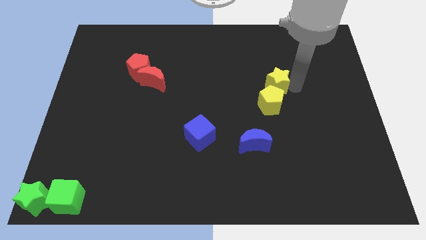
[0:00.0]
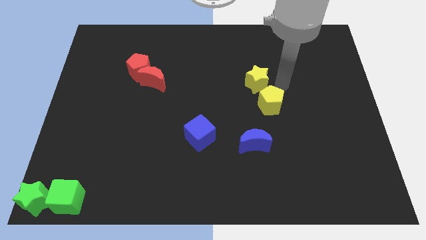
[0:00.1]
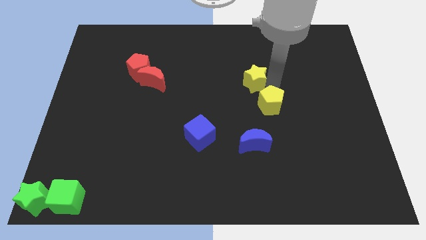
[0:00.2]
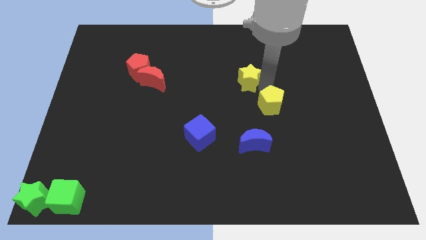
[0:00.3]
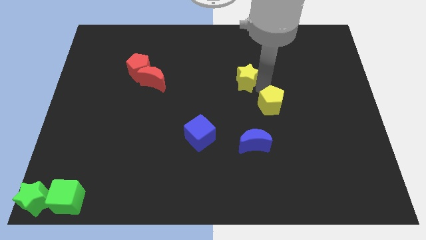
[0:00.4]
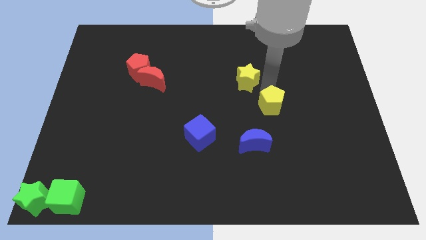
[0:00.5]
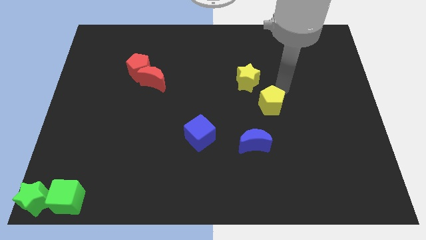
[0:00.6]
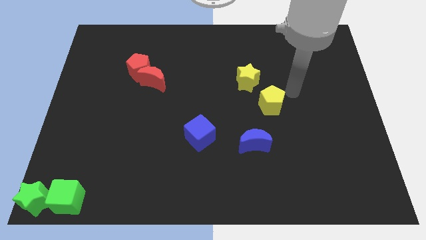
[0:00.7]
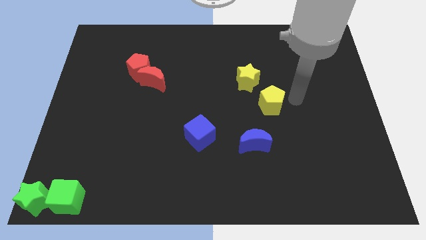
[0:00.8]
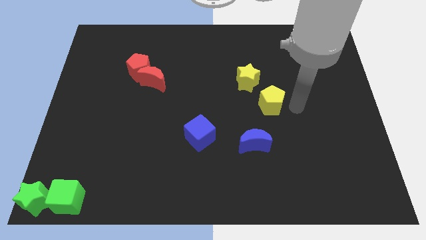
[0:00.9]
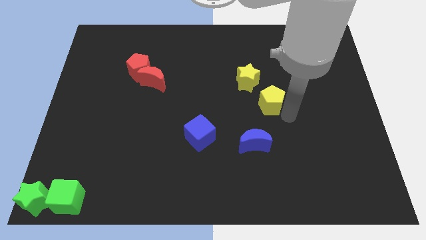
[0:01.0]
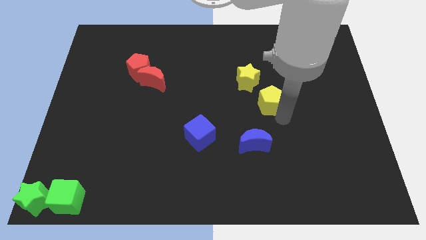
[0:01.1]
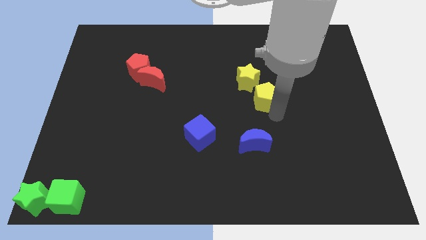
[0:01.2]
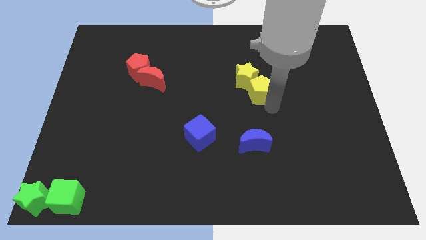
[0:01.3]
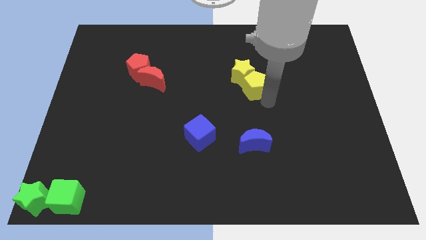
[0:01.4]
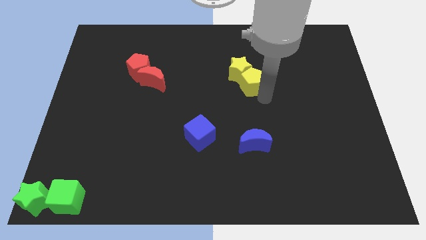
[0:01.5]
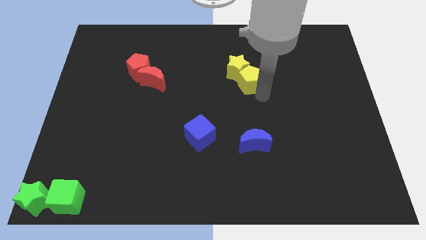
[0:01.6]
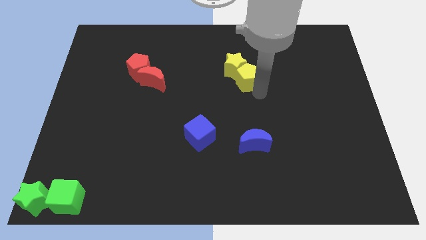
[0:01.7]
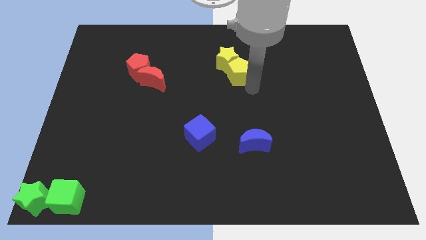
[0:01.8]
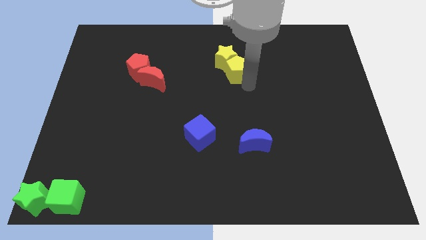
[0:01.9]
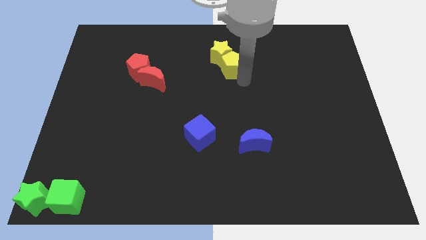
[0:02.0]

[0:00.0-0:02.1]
push the yellow star and yellow pentagon towards the top center of the board

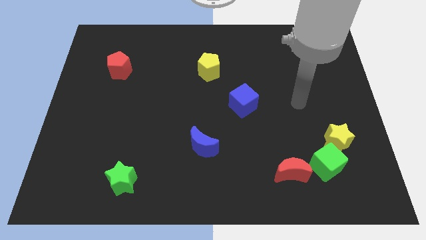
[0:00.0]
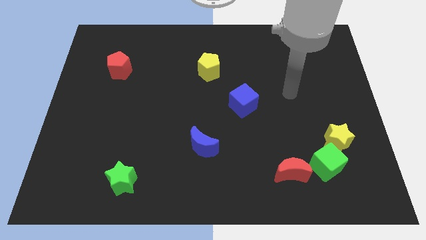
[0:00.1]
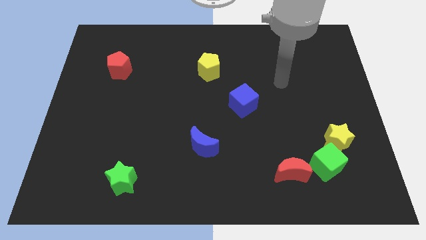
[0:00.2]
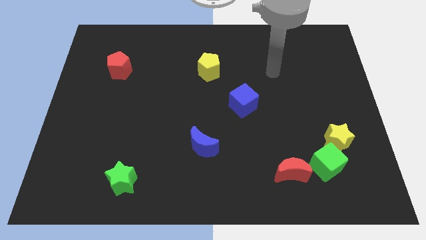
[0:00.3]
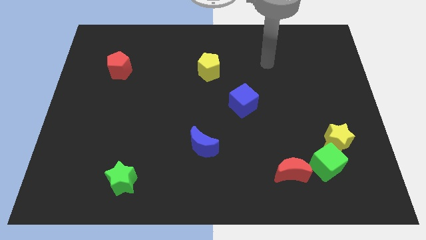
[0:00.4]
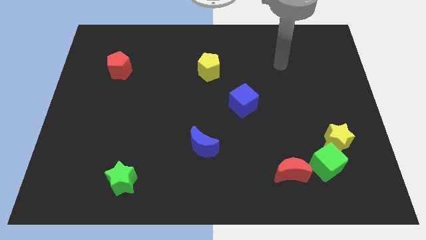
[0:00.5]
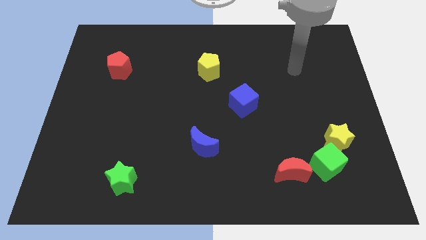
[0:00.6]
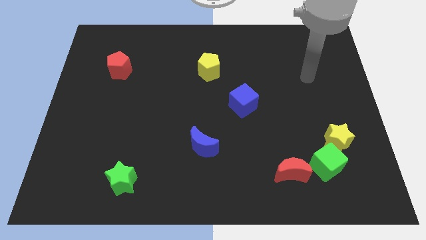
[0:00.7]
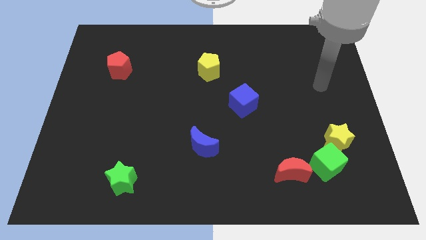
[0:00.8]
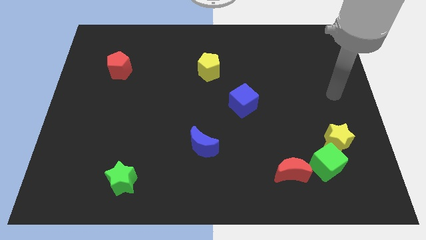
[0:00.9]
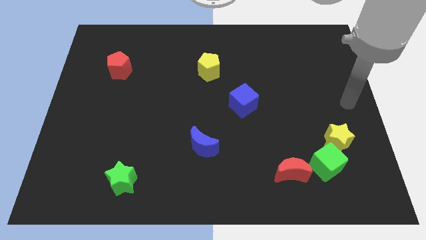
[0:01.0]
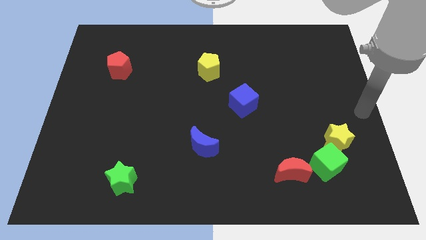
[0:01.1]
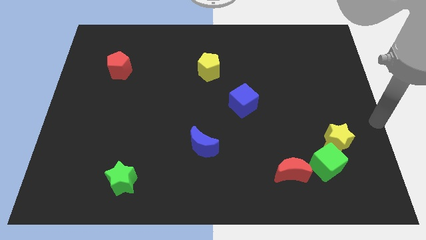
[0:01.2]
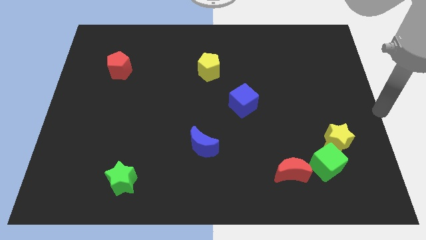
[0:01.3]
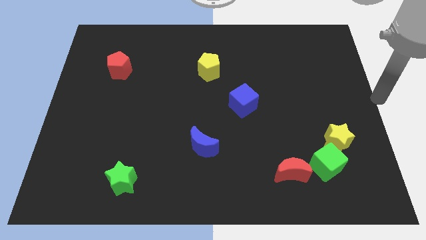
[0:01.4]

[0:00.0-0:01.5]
point your arm at the right center of teh board

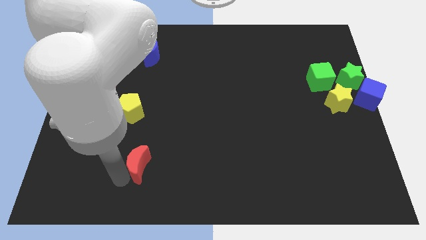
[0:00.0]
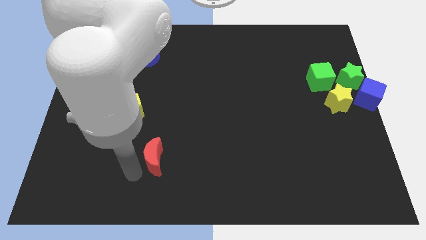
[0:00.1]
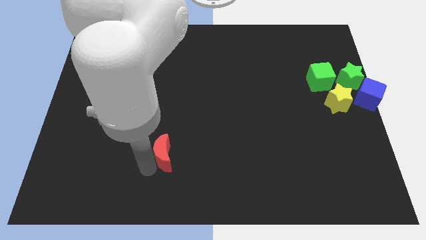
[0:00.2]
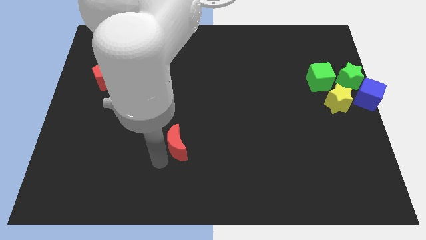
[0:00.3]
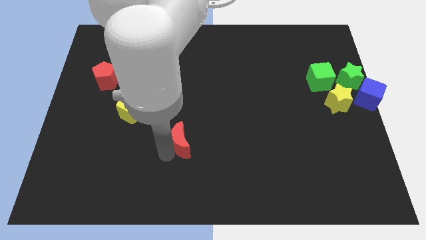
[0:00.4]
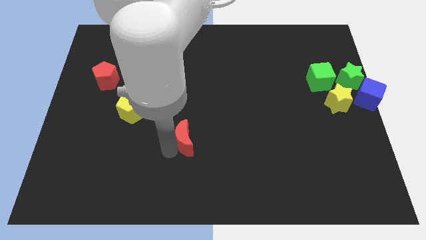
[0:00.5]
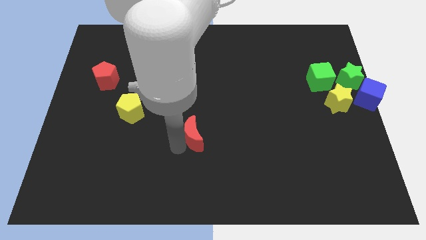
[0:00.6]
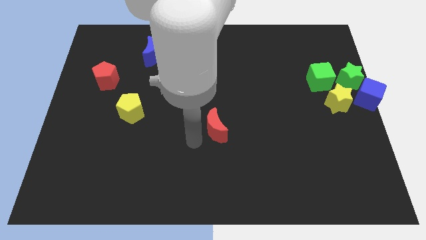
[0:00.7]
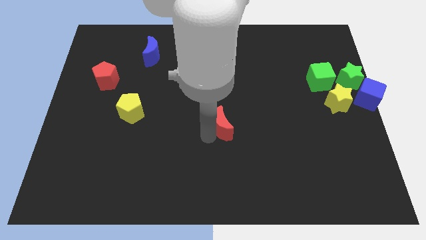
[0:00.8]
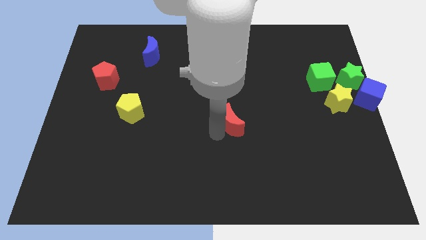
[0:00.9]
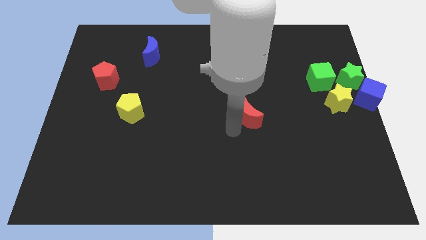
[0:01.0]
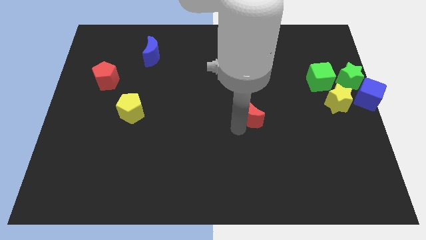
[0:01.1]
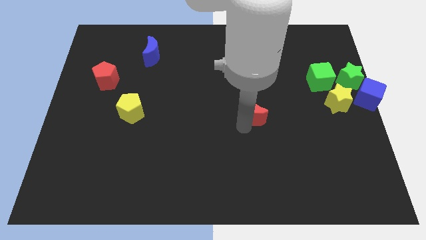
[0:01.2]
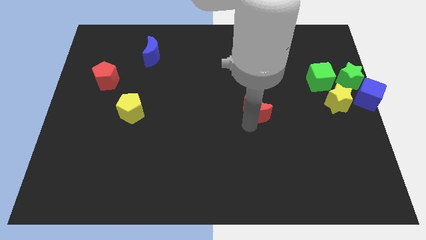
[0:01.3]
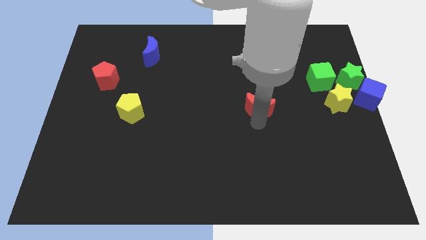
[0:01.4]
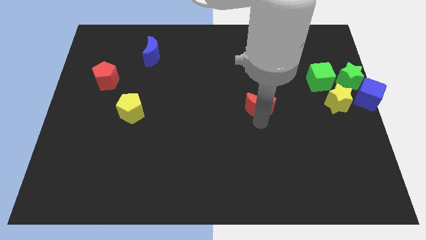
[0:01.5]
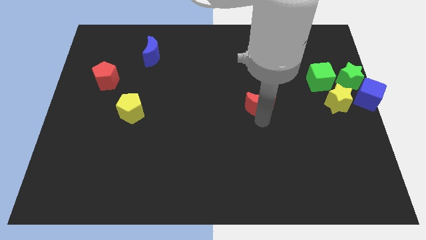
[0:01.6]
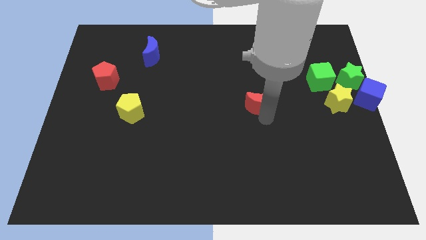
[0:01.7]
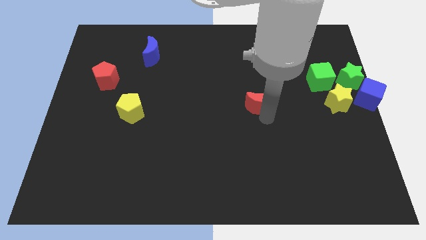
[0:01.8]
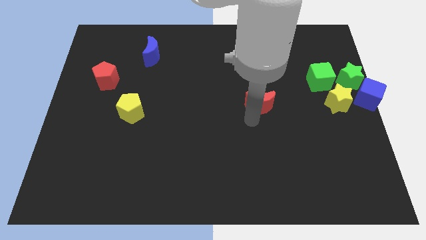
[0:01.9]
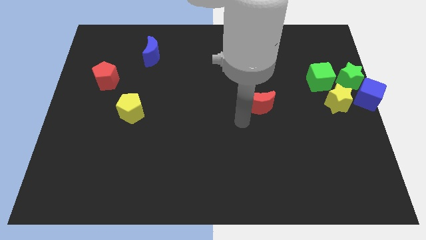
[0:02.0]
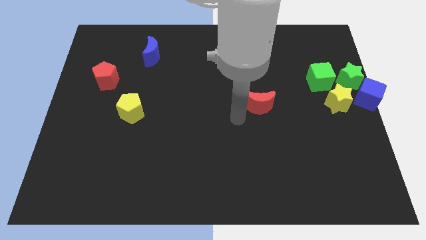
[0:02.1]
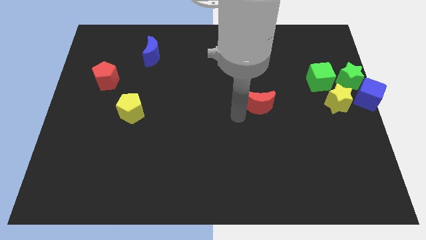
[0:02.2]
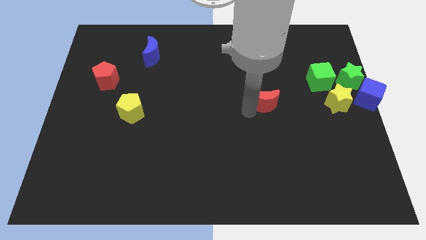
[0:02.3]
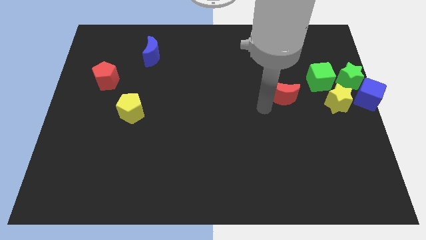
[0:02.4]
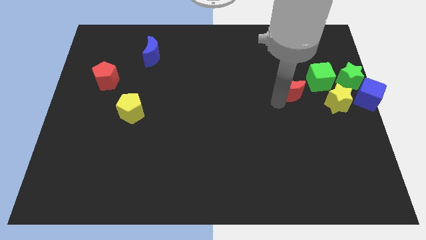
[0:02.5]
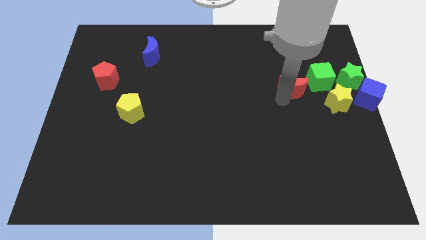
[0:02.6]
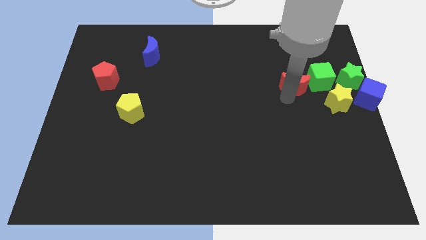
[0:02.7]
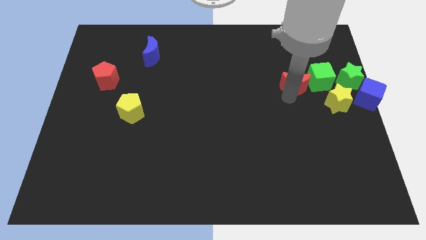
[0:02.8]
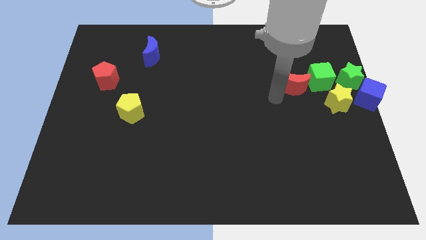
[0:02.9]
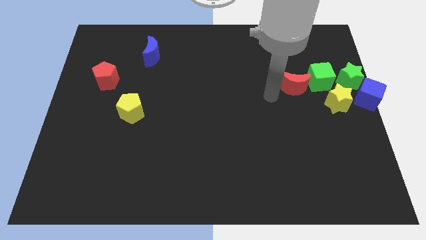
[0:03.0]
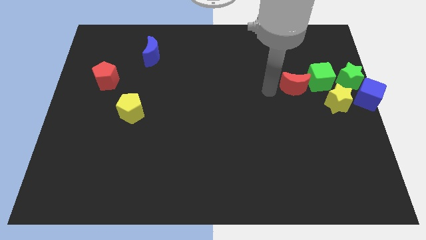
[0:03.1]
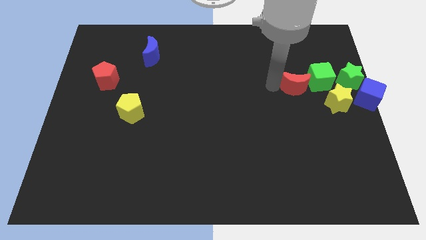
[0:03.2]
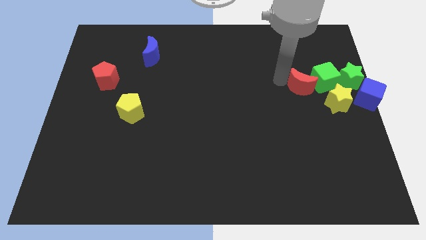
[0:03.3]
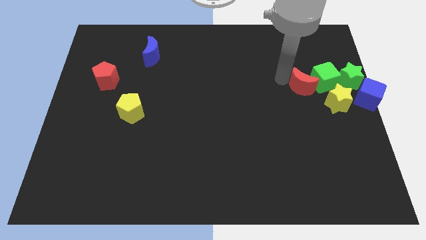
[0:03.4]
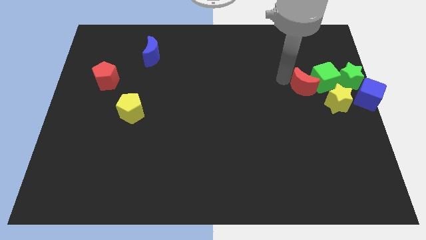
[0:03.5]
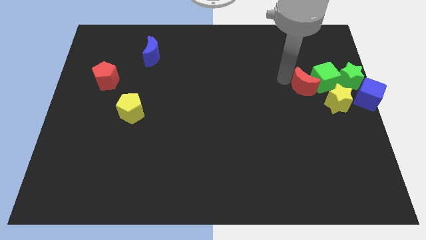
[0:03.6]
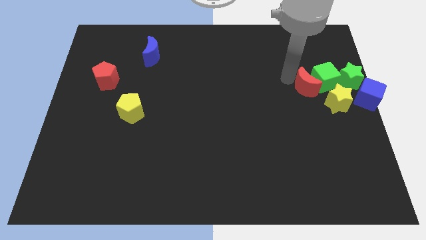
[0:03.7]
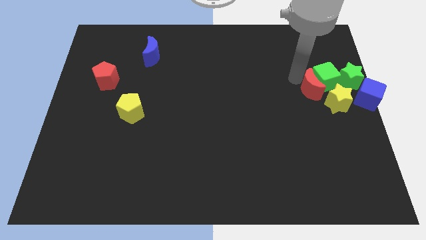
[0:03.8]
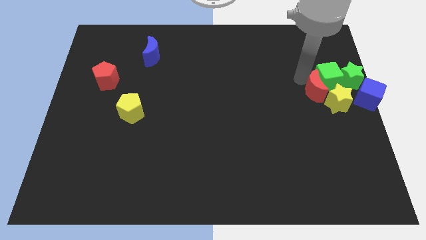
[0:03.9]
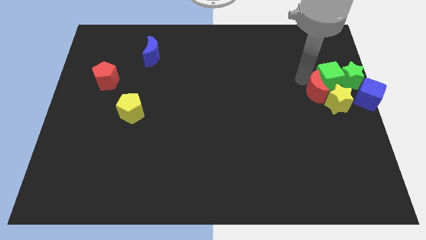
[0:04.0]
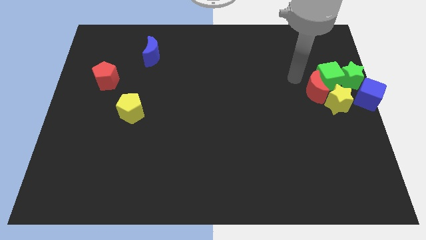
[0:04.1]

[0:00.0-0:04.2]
push the red crescent into the green cube

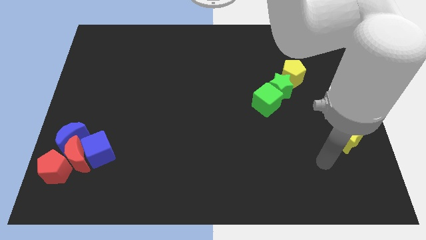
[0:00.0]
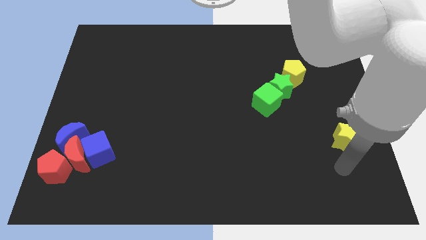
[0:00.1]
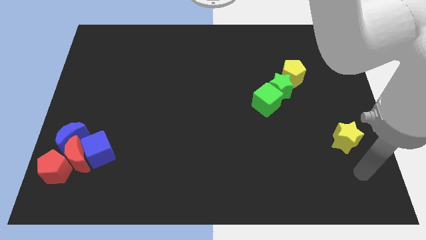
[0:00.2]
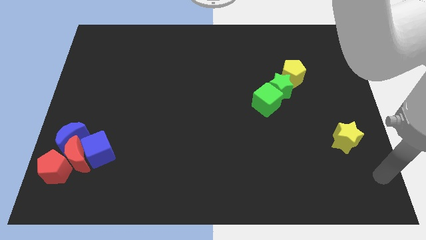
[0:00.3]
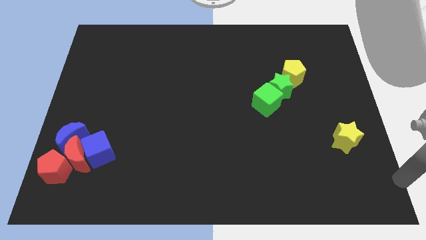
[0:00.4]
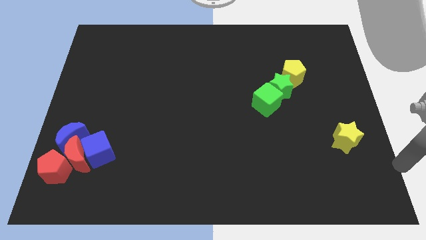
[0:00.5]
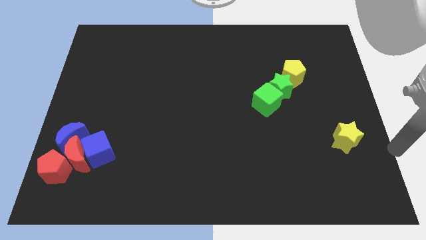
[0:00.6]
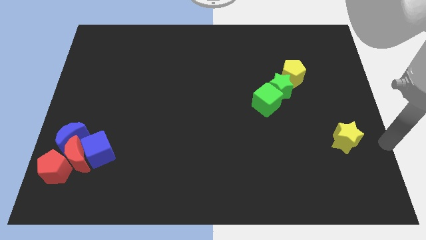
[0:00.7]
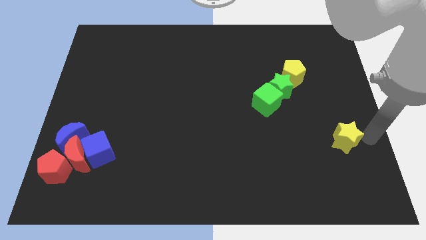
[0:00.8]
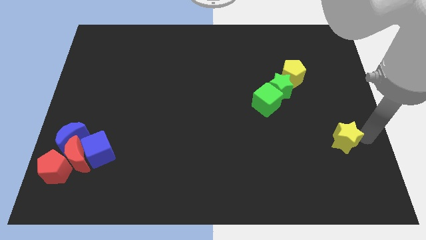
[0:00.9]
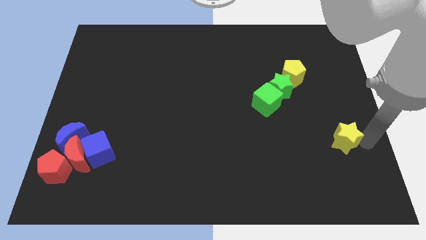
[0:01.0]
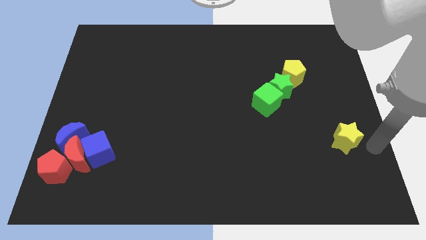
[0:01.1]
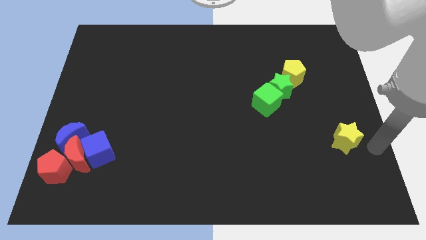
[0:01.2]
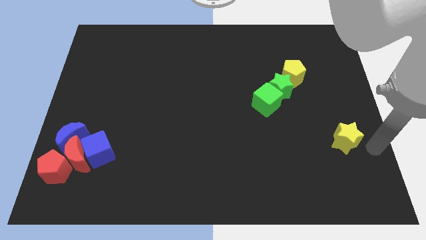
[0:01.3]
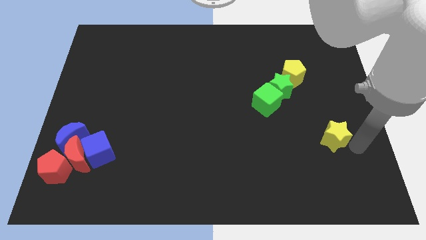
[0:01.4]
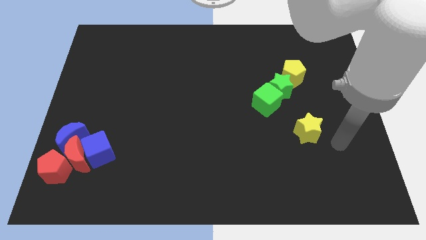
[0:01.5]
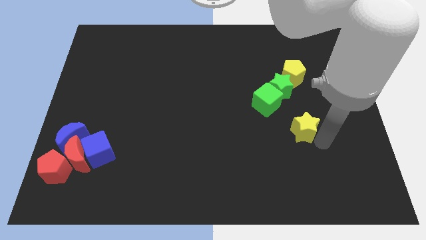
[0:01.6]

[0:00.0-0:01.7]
drag the yellow star towards the green cube
